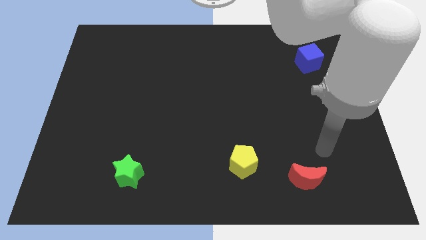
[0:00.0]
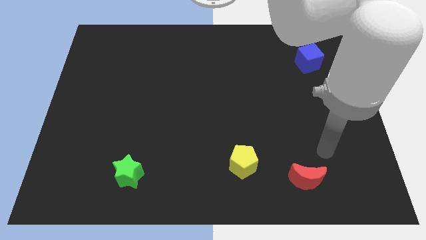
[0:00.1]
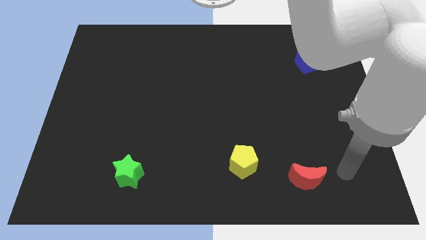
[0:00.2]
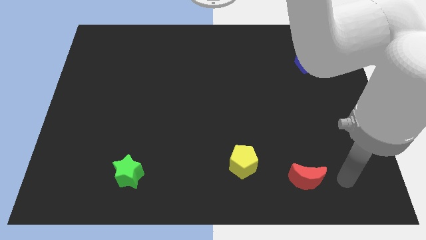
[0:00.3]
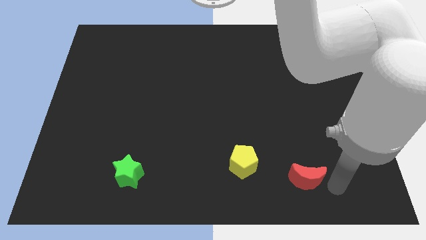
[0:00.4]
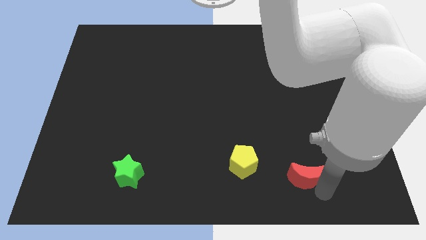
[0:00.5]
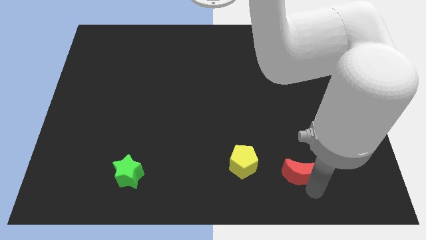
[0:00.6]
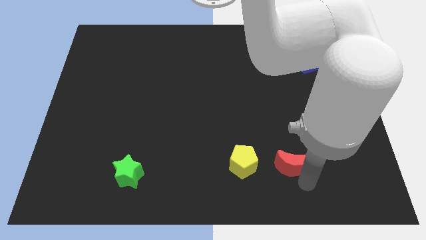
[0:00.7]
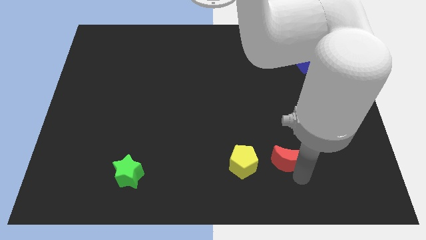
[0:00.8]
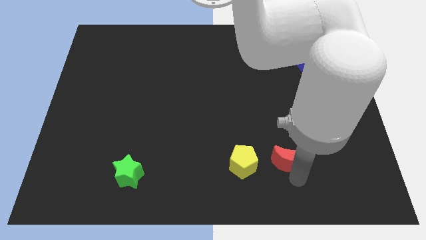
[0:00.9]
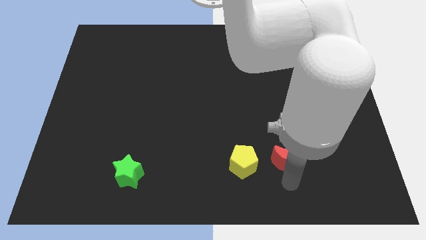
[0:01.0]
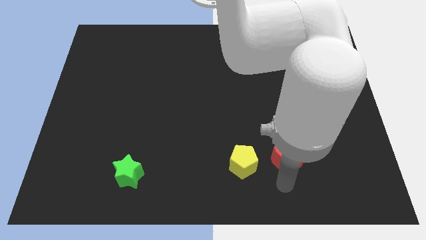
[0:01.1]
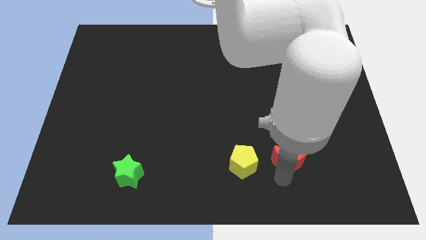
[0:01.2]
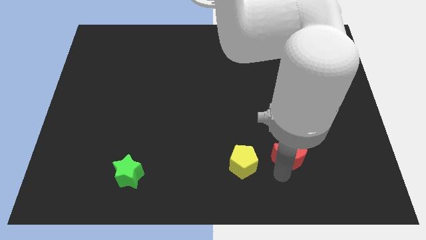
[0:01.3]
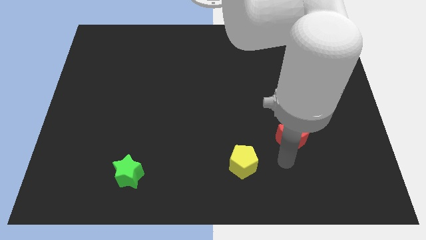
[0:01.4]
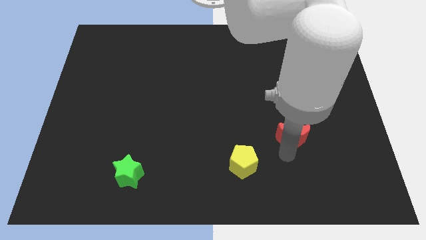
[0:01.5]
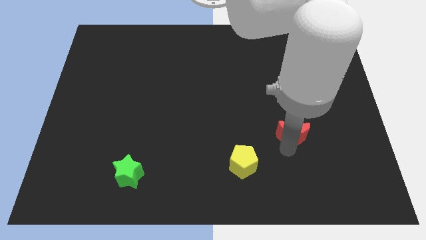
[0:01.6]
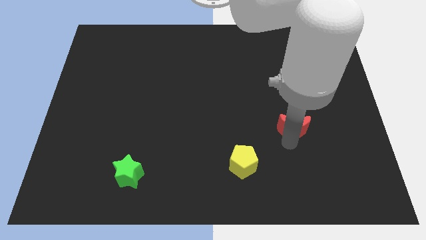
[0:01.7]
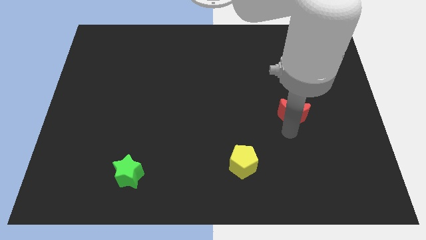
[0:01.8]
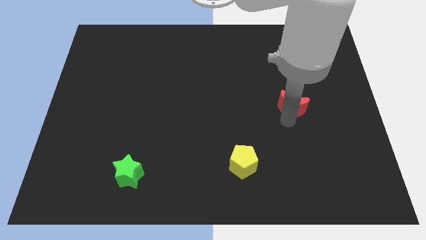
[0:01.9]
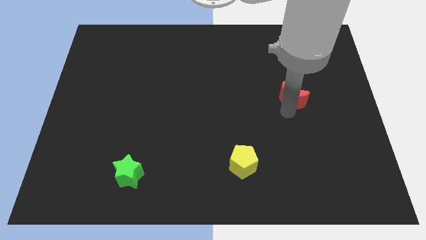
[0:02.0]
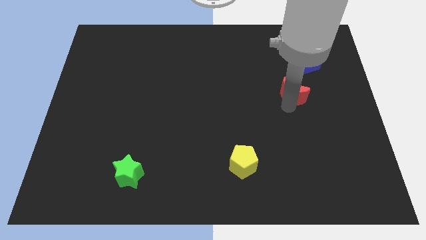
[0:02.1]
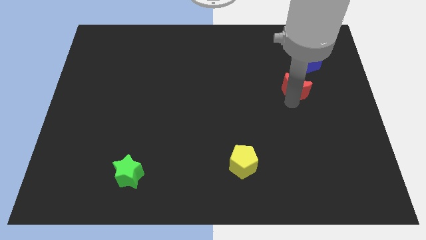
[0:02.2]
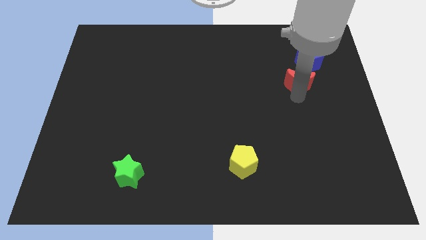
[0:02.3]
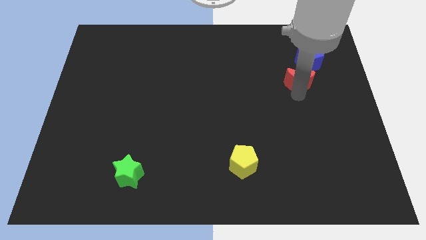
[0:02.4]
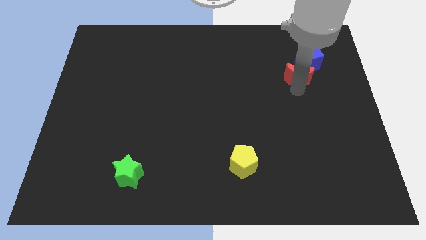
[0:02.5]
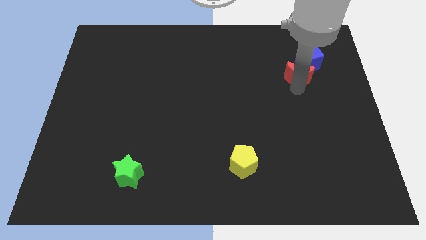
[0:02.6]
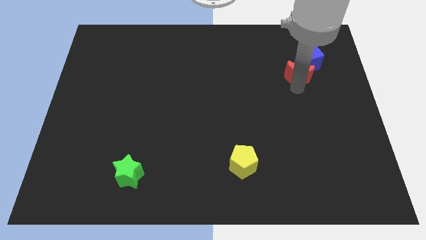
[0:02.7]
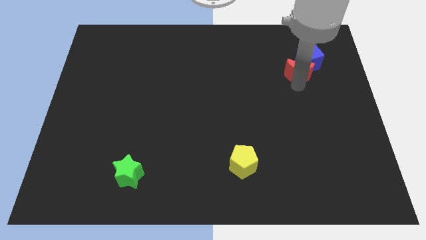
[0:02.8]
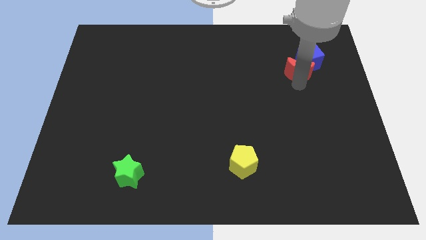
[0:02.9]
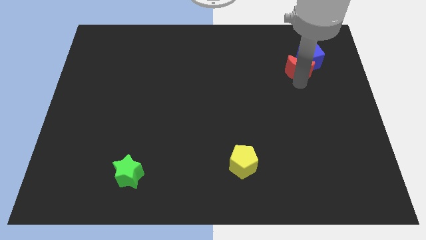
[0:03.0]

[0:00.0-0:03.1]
push the moon next to the blue cube

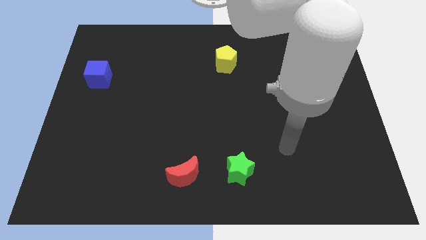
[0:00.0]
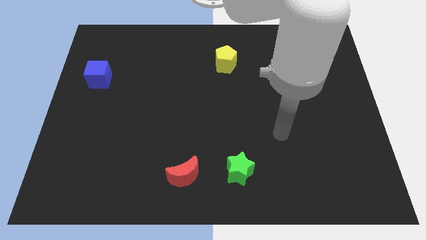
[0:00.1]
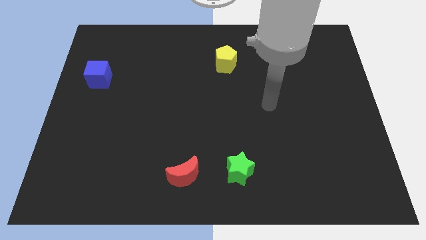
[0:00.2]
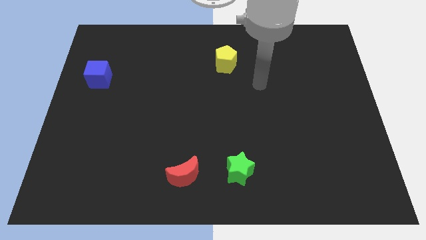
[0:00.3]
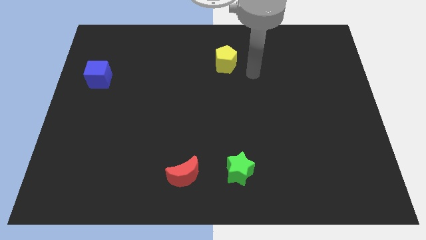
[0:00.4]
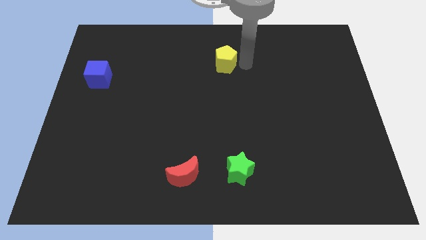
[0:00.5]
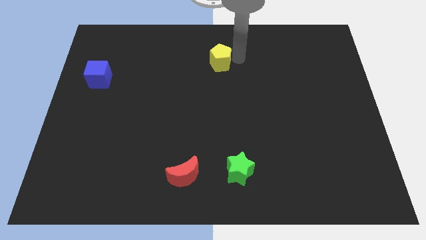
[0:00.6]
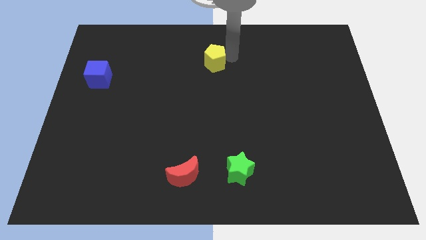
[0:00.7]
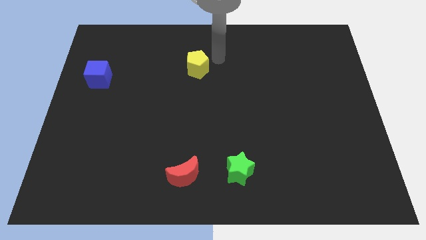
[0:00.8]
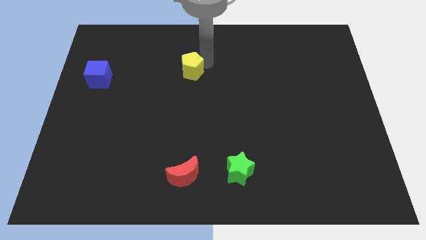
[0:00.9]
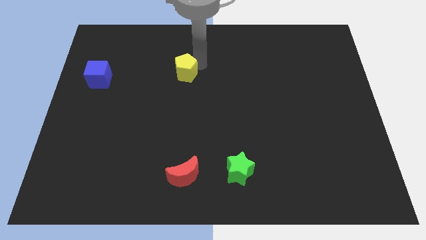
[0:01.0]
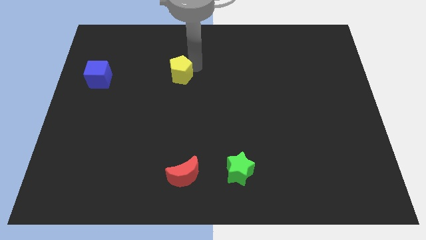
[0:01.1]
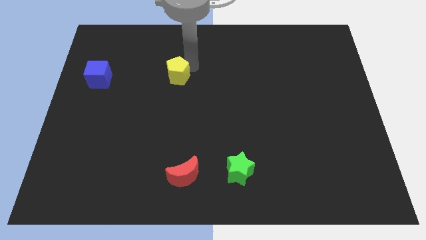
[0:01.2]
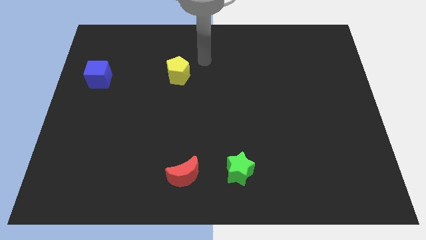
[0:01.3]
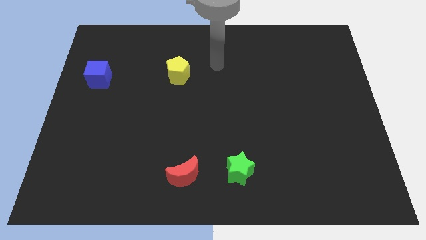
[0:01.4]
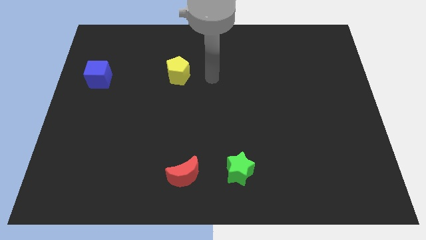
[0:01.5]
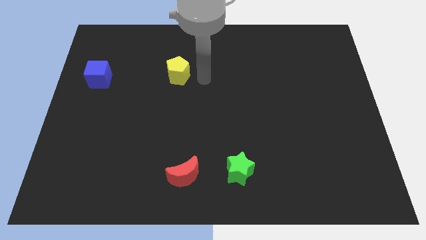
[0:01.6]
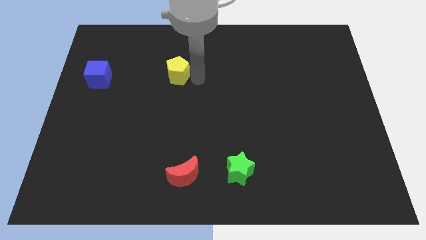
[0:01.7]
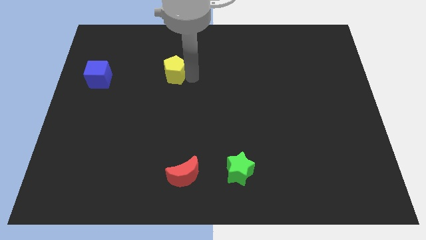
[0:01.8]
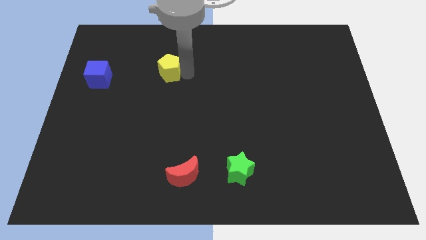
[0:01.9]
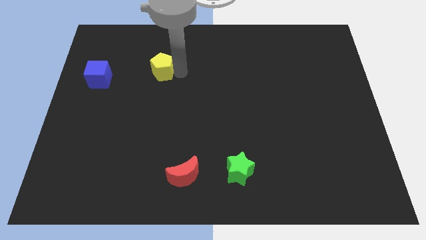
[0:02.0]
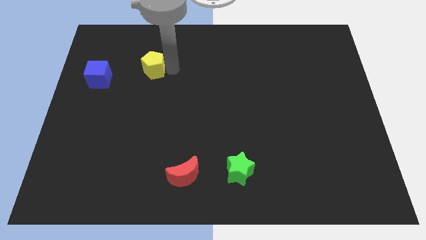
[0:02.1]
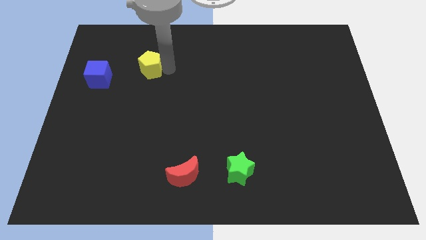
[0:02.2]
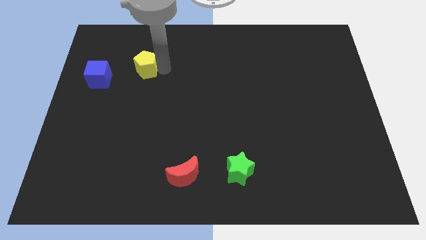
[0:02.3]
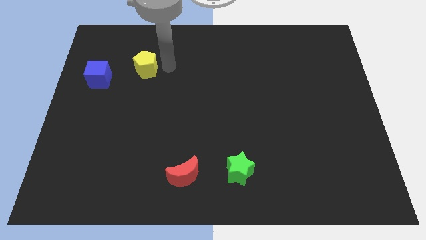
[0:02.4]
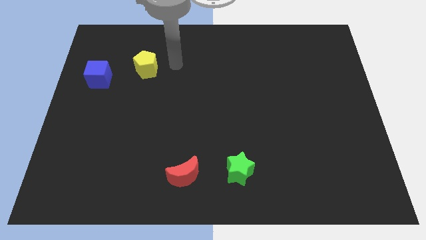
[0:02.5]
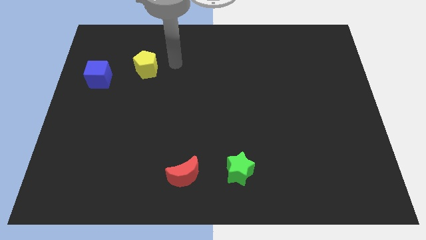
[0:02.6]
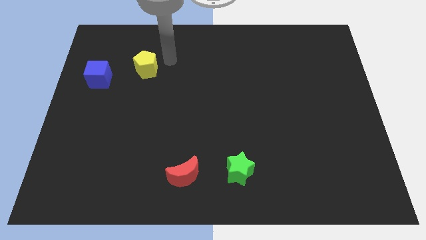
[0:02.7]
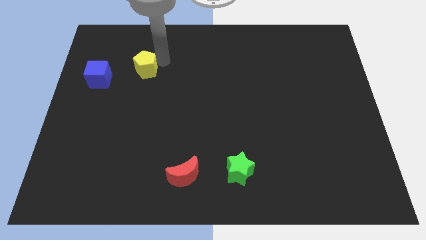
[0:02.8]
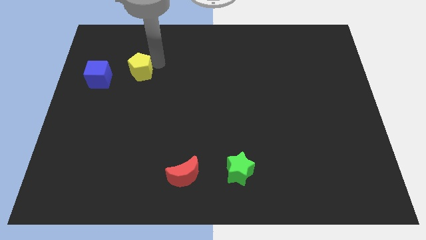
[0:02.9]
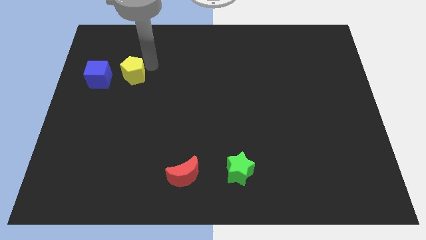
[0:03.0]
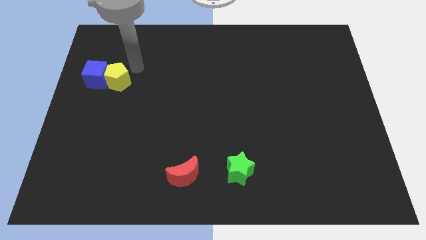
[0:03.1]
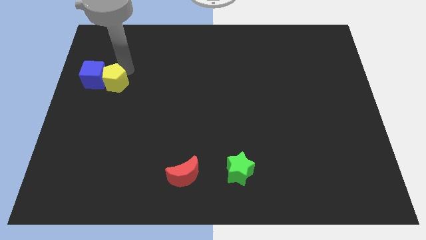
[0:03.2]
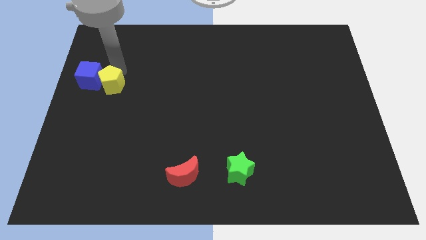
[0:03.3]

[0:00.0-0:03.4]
put the yellow pentagon to the blue block

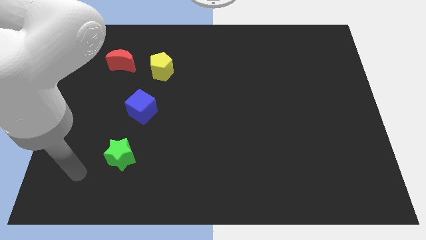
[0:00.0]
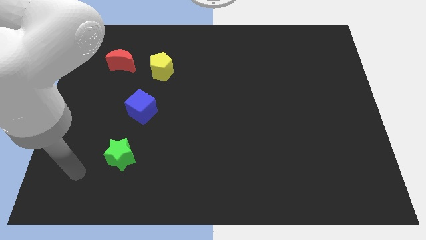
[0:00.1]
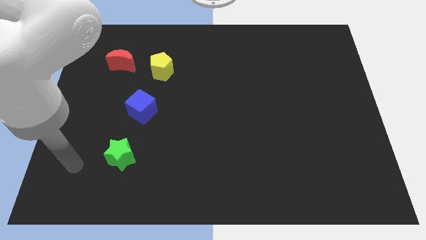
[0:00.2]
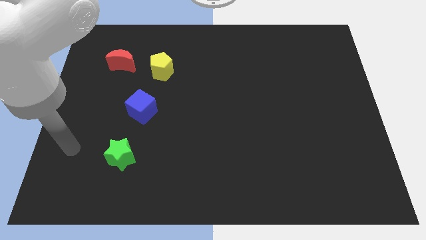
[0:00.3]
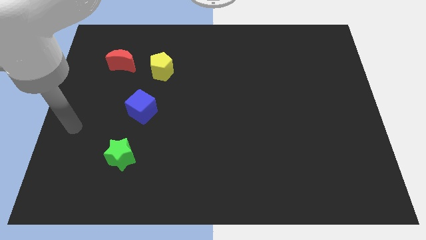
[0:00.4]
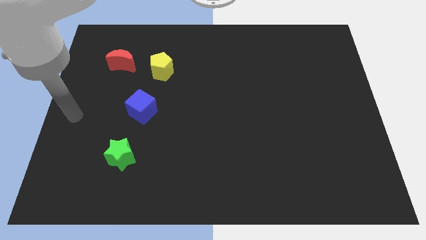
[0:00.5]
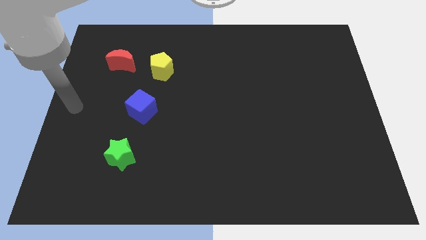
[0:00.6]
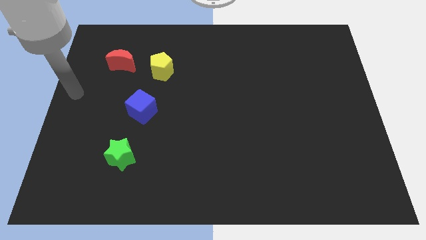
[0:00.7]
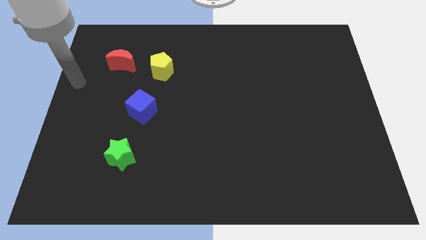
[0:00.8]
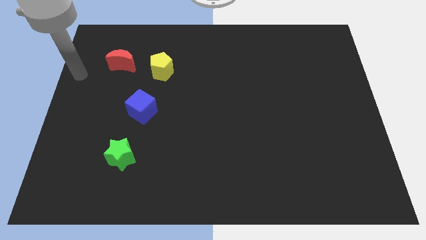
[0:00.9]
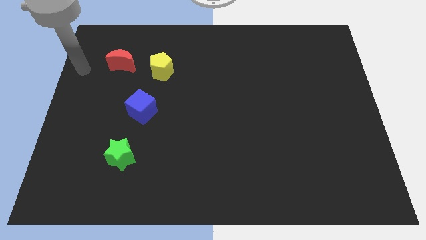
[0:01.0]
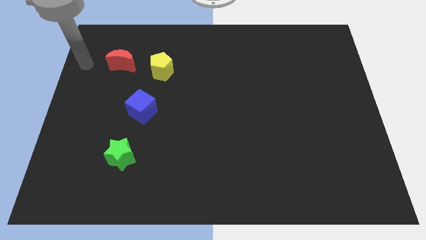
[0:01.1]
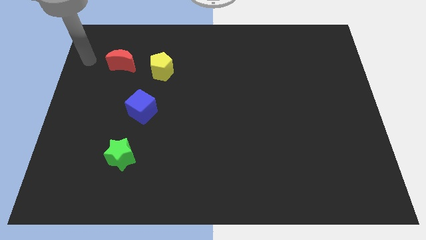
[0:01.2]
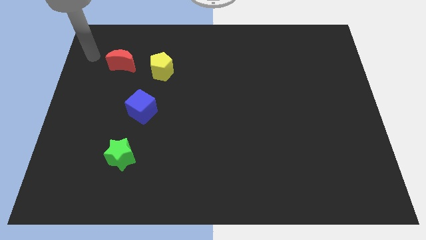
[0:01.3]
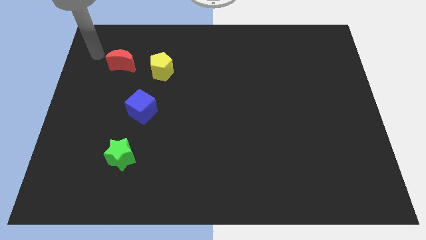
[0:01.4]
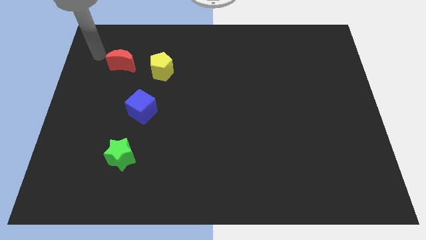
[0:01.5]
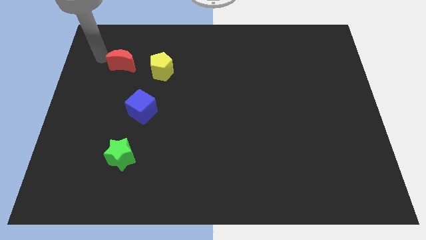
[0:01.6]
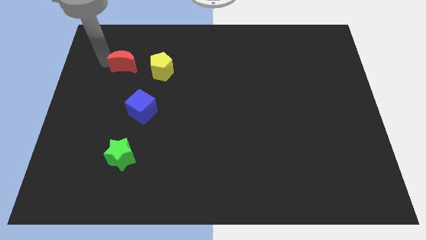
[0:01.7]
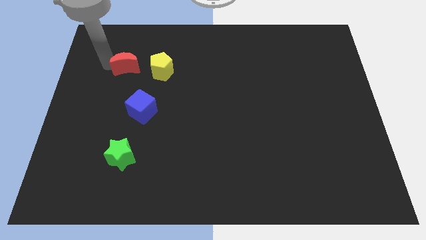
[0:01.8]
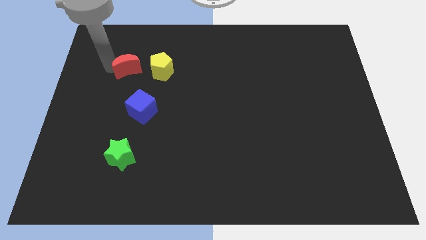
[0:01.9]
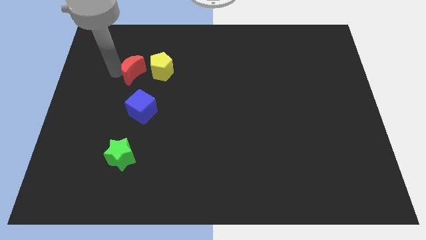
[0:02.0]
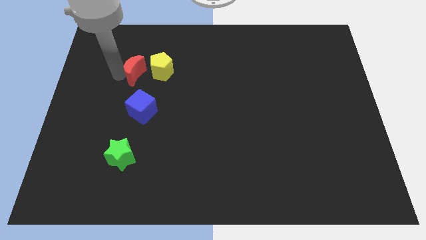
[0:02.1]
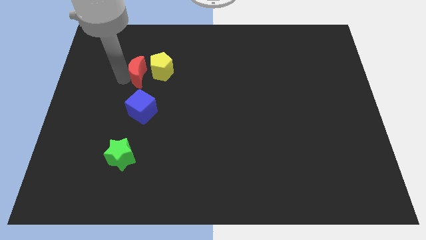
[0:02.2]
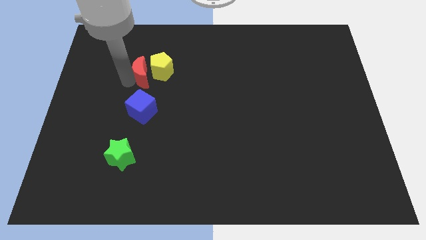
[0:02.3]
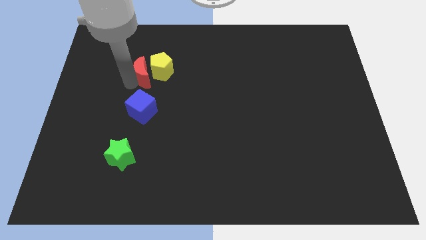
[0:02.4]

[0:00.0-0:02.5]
push the moon next to the yellow pentagon
